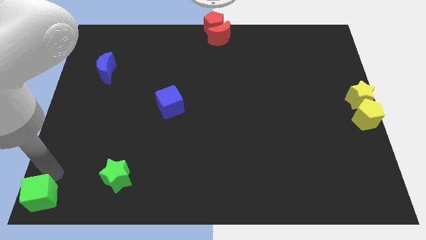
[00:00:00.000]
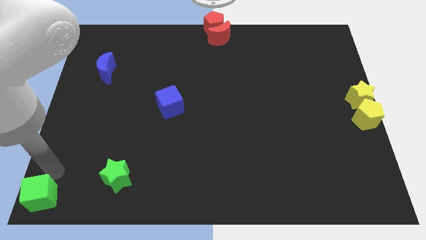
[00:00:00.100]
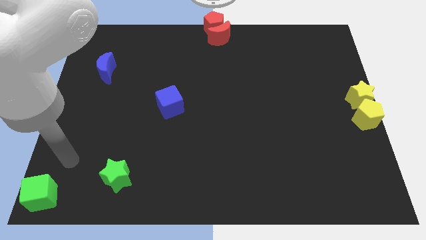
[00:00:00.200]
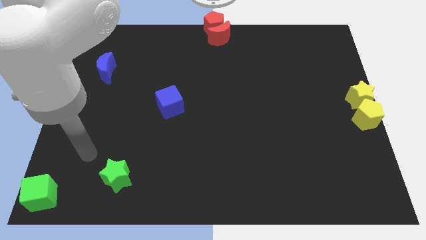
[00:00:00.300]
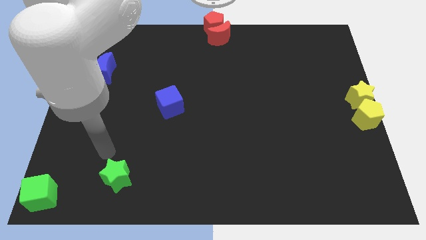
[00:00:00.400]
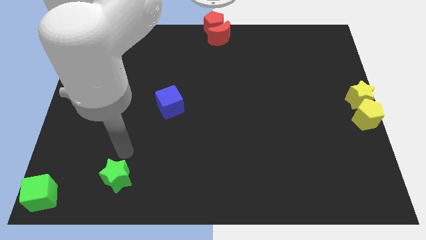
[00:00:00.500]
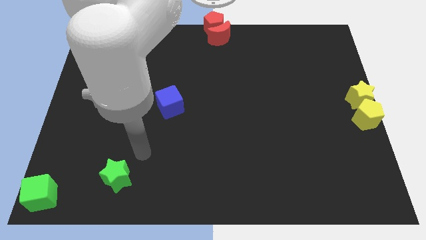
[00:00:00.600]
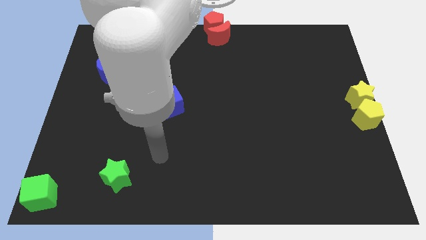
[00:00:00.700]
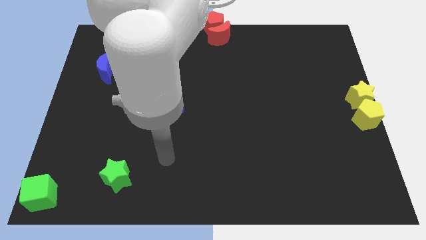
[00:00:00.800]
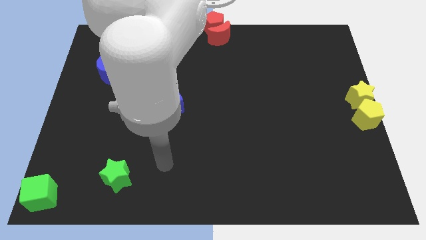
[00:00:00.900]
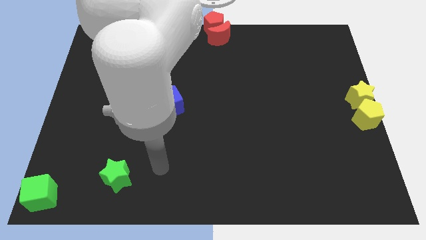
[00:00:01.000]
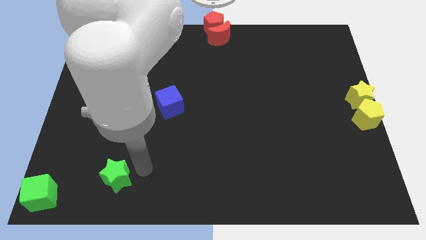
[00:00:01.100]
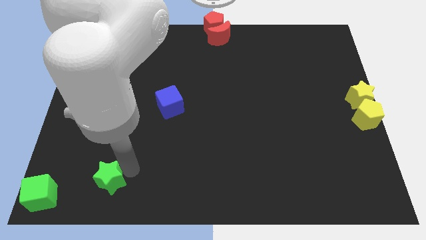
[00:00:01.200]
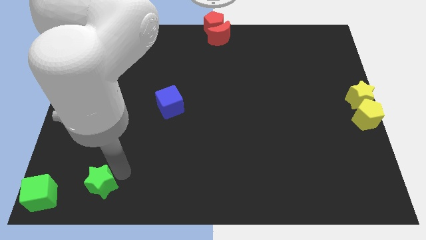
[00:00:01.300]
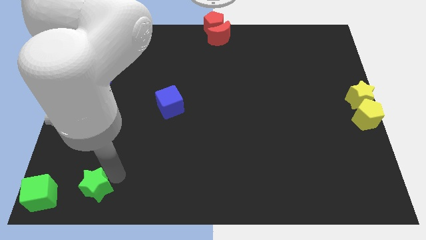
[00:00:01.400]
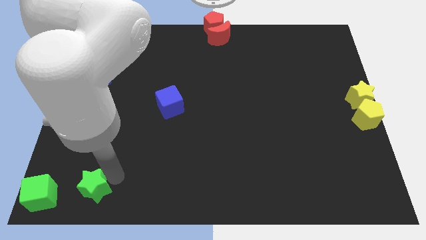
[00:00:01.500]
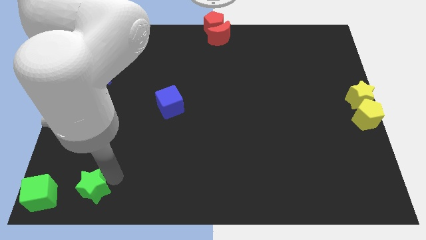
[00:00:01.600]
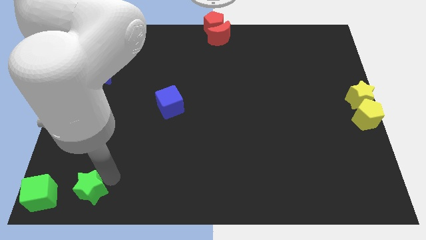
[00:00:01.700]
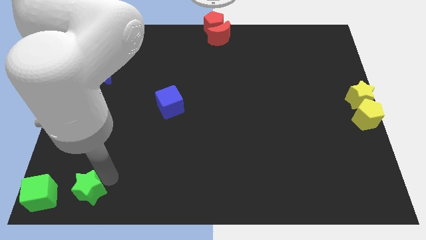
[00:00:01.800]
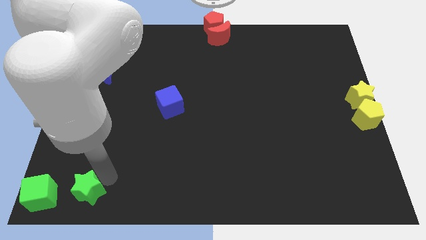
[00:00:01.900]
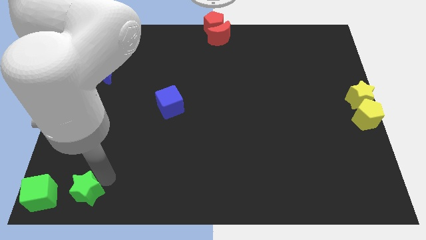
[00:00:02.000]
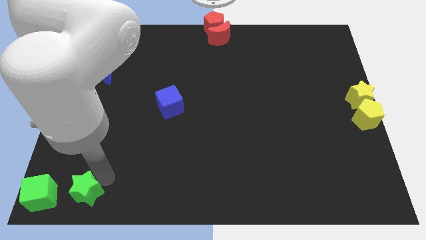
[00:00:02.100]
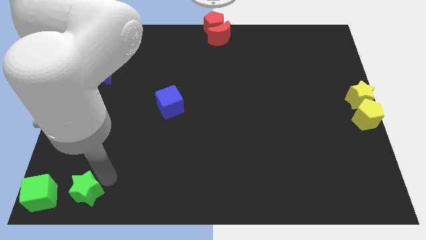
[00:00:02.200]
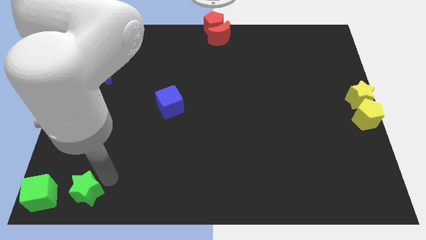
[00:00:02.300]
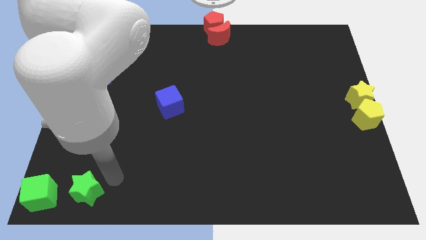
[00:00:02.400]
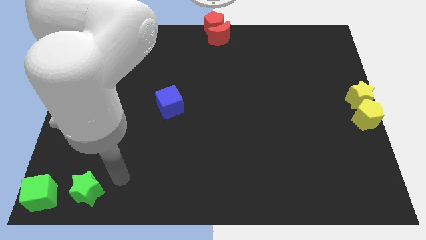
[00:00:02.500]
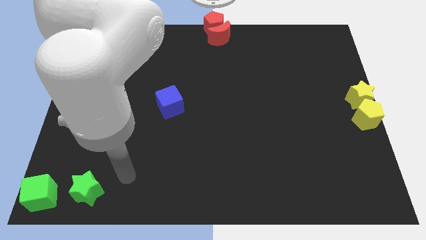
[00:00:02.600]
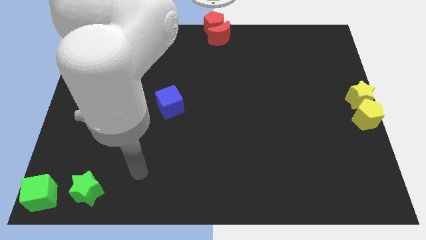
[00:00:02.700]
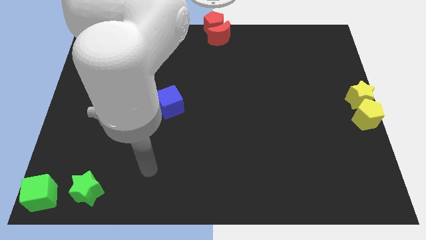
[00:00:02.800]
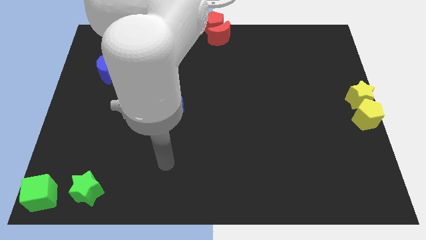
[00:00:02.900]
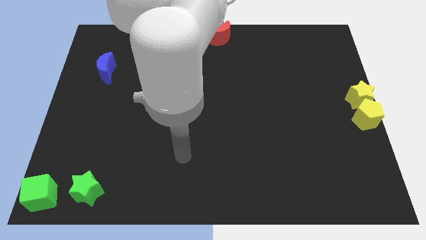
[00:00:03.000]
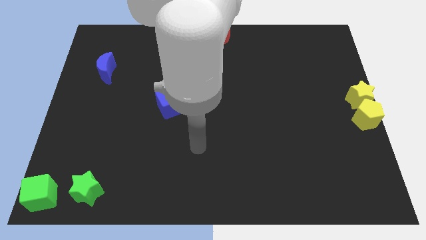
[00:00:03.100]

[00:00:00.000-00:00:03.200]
push the green star towards the green cube

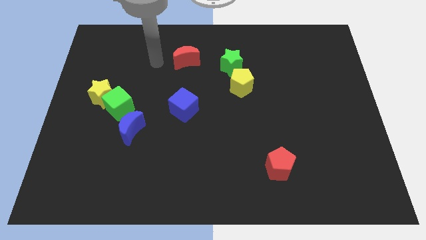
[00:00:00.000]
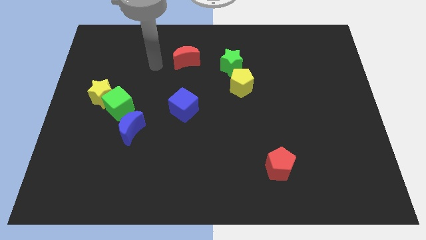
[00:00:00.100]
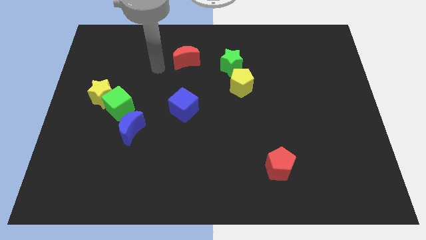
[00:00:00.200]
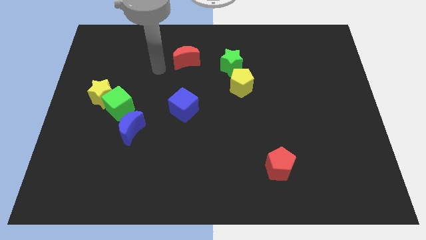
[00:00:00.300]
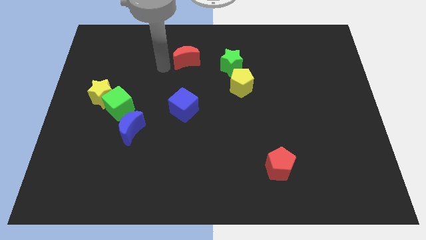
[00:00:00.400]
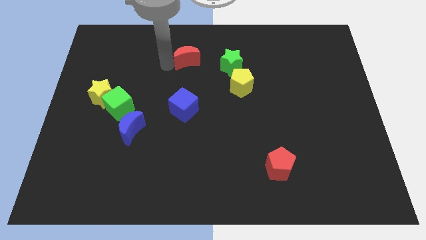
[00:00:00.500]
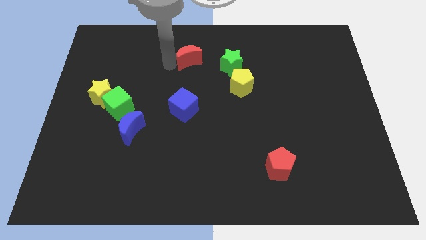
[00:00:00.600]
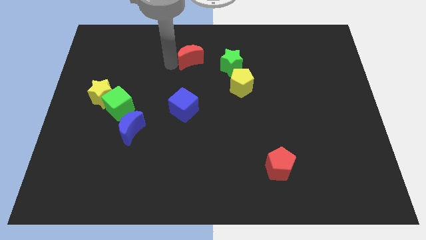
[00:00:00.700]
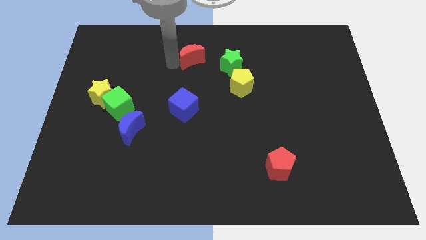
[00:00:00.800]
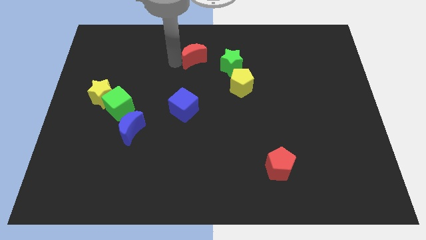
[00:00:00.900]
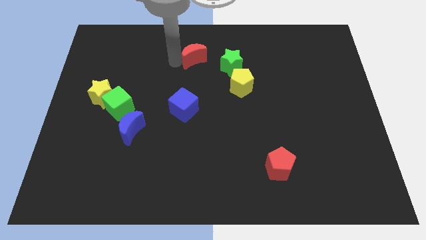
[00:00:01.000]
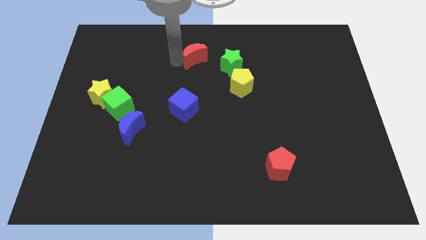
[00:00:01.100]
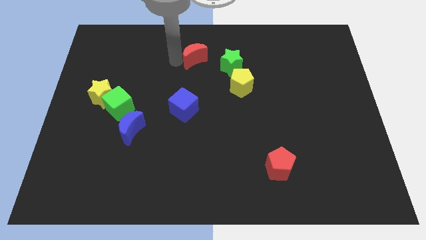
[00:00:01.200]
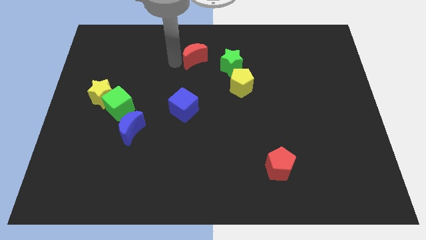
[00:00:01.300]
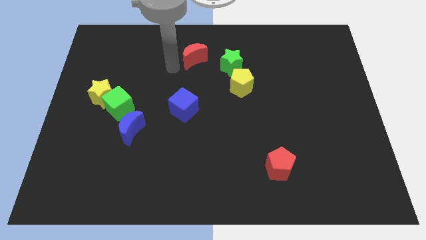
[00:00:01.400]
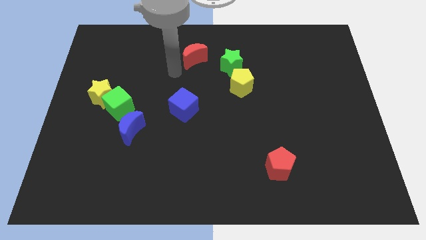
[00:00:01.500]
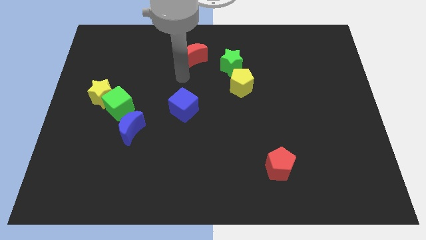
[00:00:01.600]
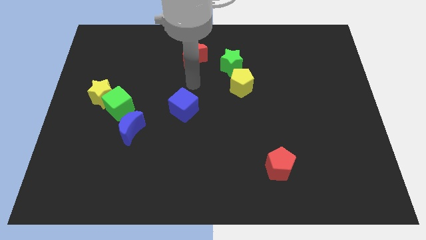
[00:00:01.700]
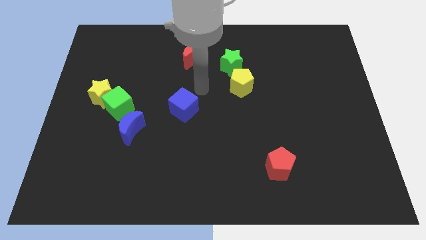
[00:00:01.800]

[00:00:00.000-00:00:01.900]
push the red crescent slightly right side

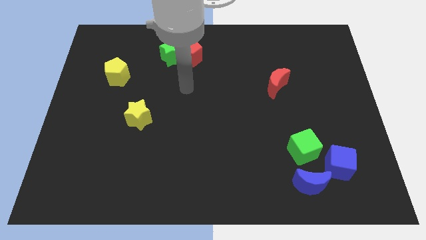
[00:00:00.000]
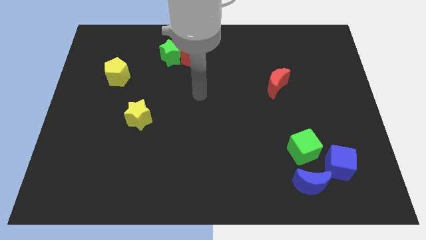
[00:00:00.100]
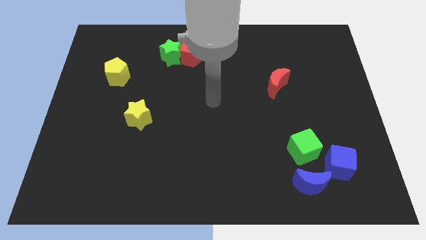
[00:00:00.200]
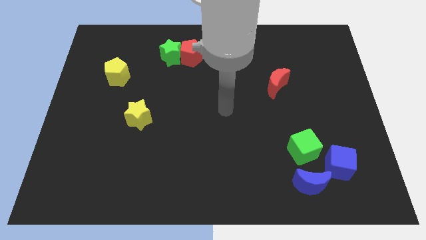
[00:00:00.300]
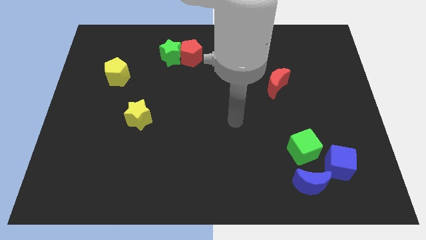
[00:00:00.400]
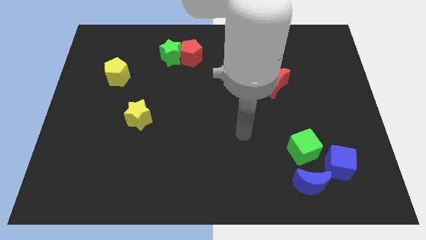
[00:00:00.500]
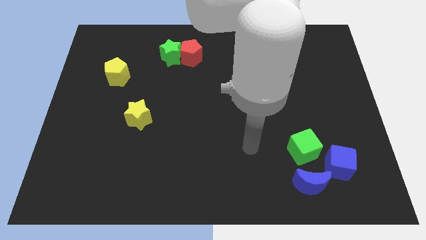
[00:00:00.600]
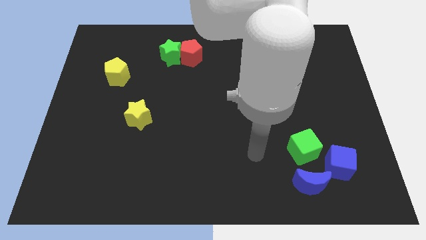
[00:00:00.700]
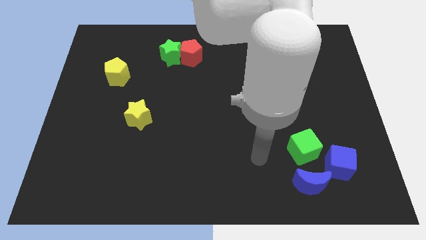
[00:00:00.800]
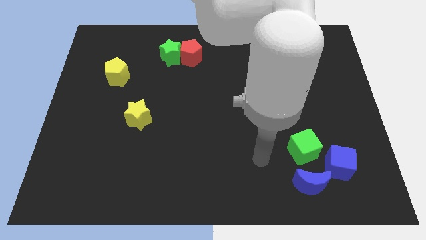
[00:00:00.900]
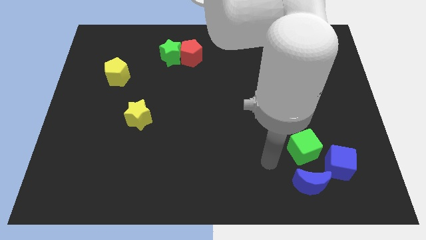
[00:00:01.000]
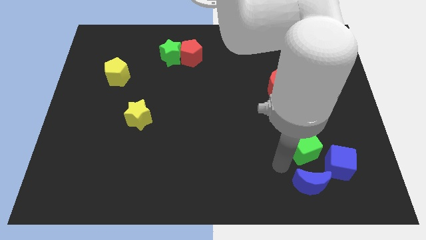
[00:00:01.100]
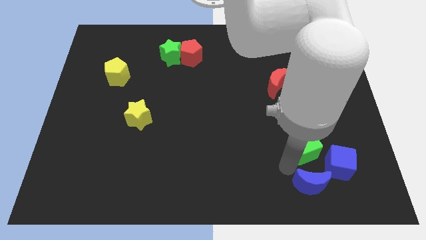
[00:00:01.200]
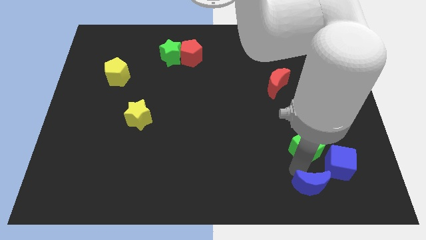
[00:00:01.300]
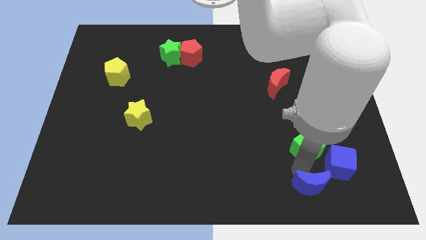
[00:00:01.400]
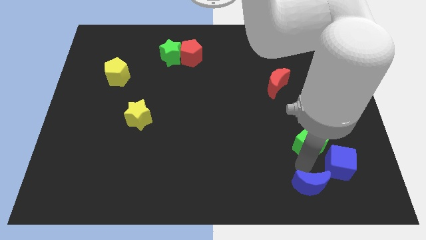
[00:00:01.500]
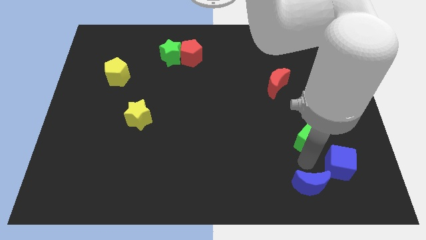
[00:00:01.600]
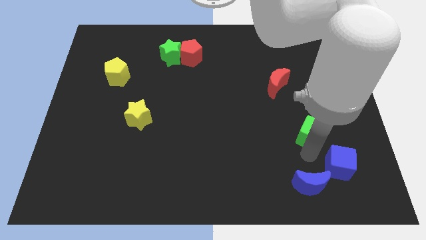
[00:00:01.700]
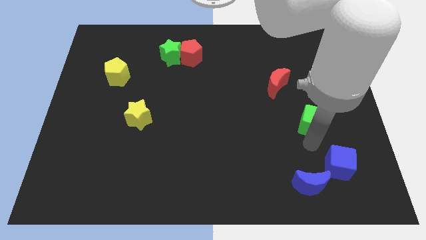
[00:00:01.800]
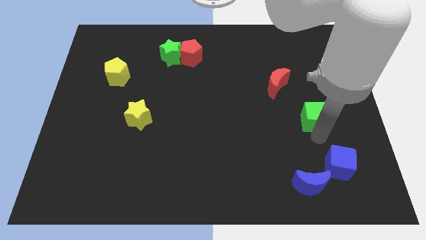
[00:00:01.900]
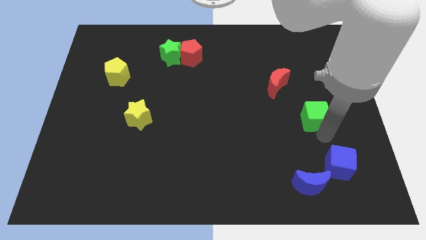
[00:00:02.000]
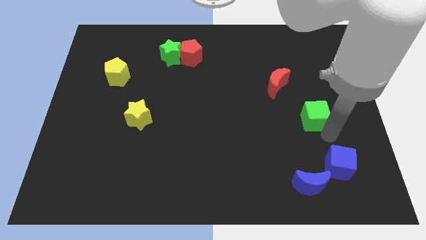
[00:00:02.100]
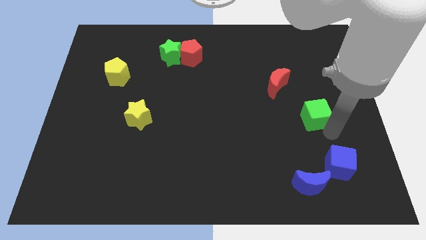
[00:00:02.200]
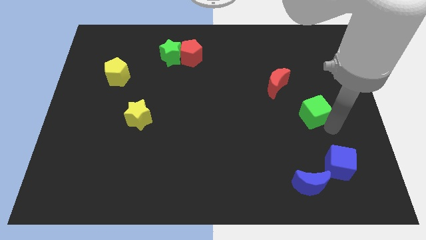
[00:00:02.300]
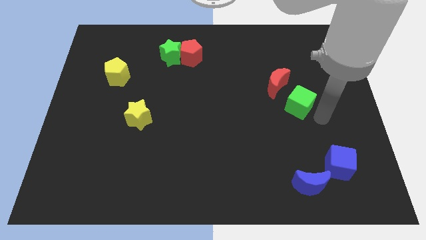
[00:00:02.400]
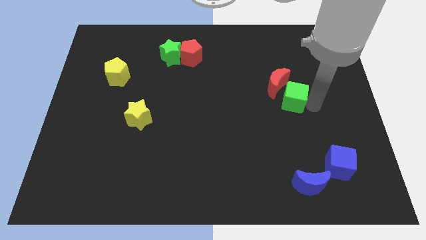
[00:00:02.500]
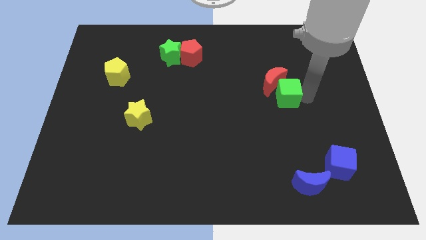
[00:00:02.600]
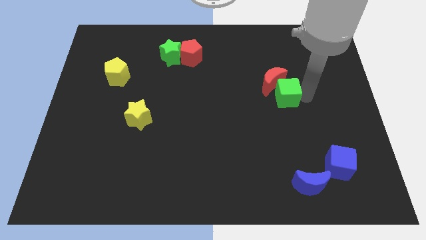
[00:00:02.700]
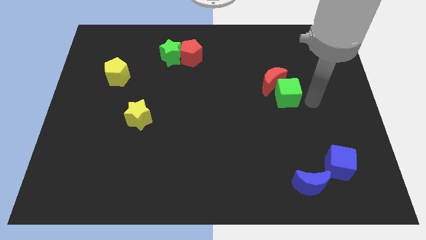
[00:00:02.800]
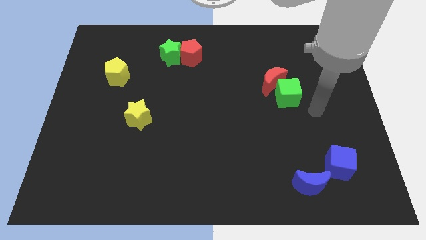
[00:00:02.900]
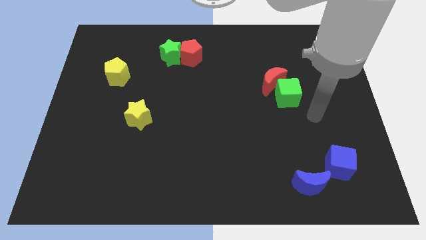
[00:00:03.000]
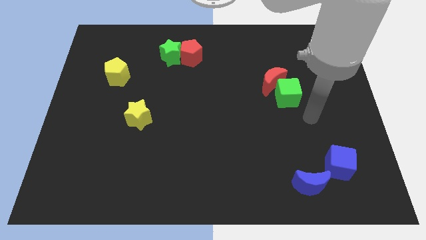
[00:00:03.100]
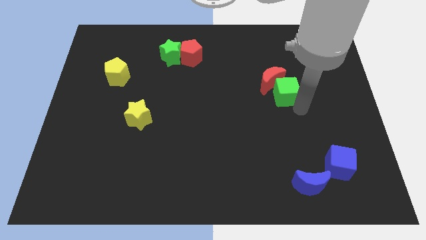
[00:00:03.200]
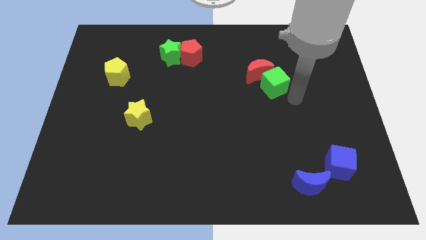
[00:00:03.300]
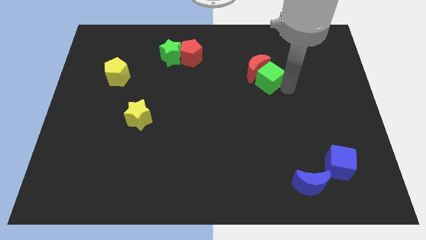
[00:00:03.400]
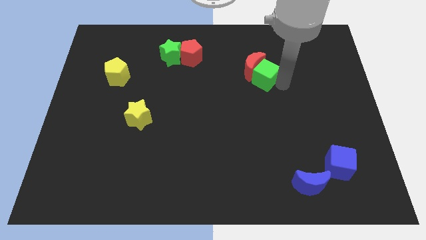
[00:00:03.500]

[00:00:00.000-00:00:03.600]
push the green cube into the red moon

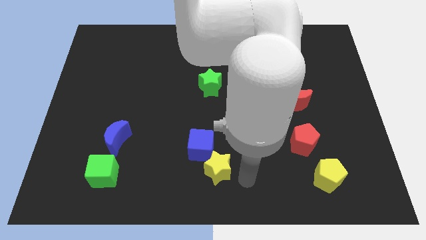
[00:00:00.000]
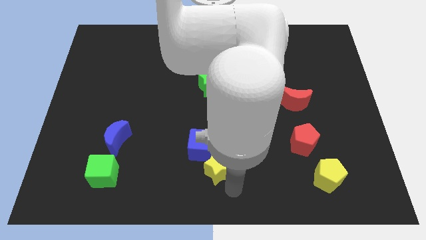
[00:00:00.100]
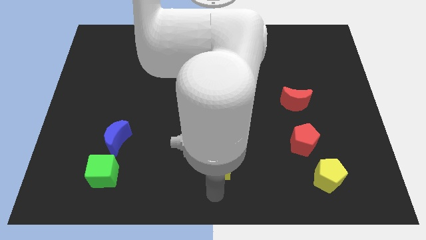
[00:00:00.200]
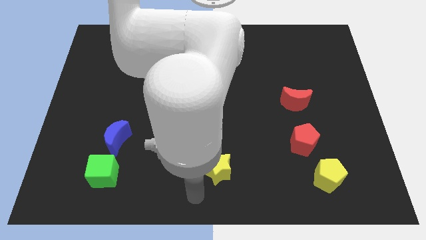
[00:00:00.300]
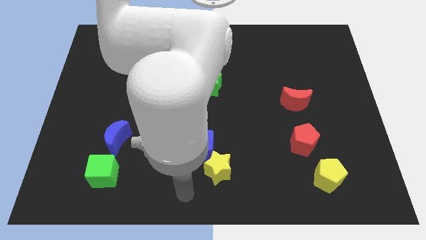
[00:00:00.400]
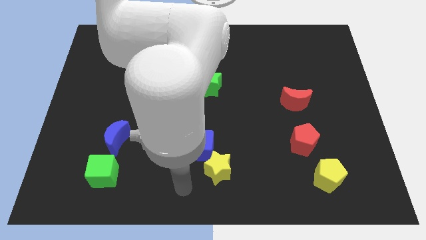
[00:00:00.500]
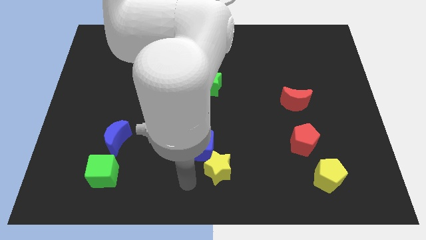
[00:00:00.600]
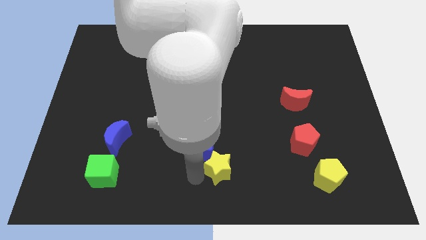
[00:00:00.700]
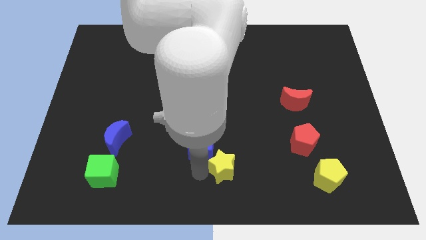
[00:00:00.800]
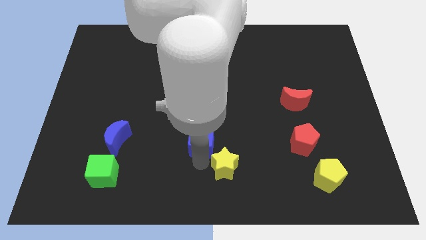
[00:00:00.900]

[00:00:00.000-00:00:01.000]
move the blue cube slightly up
